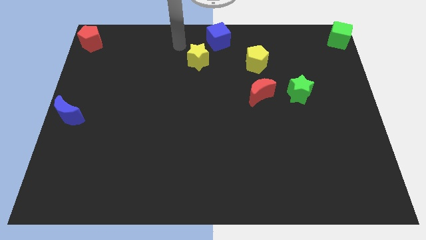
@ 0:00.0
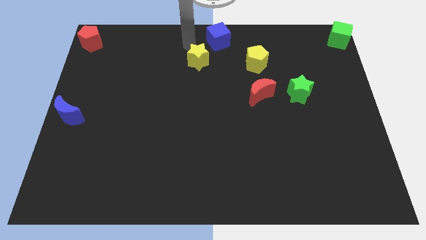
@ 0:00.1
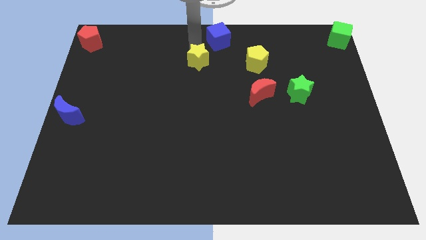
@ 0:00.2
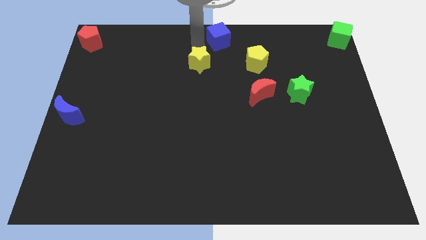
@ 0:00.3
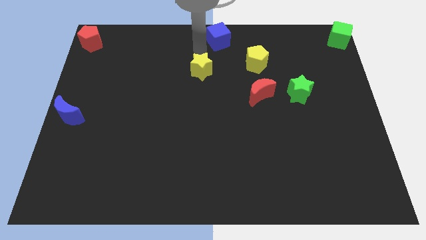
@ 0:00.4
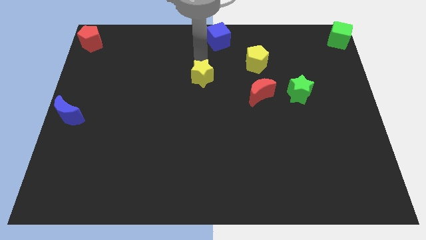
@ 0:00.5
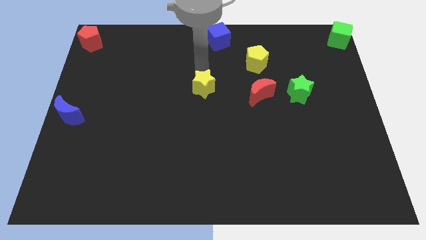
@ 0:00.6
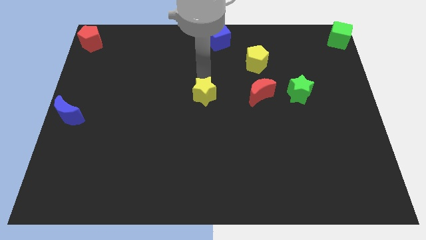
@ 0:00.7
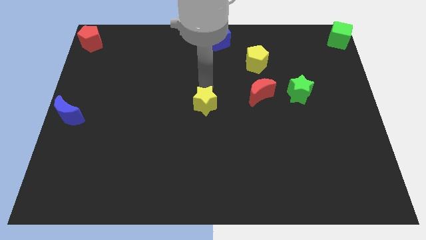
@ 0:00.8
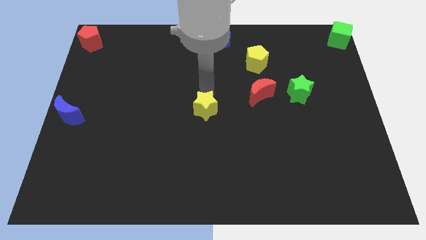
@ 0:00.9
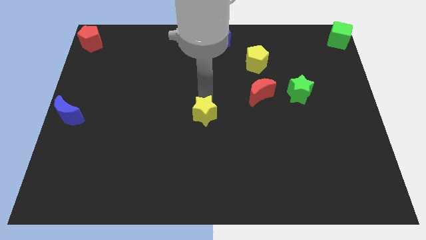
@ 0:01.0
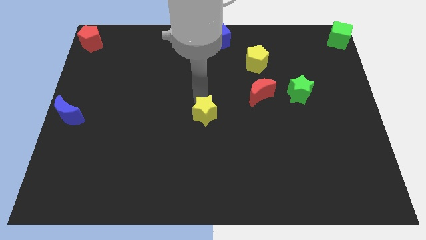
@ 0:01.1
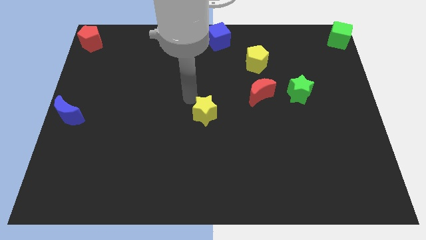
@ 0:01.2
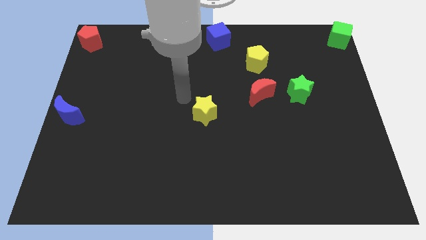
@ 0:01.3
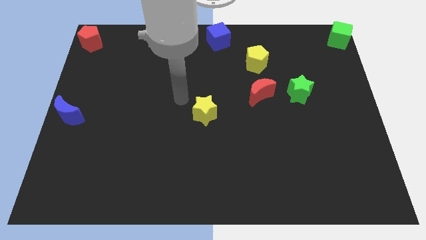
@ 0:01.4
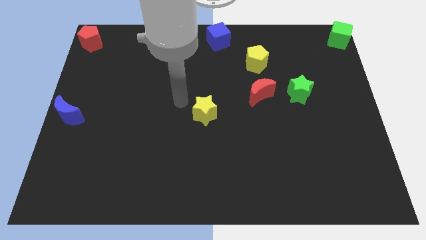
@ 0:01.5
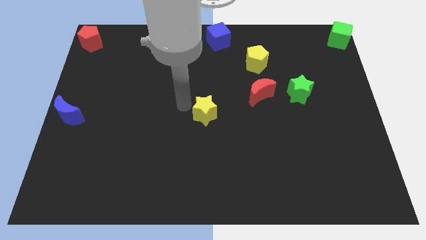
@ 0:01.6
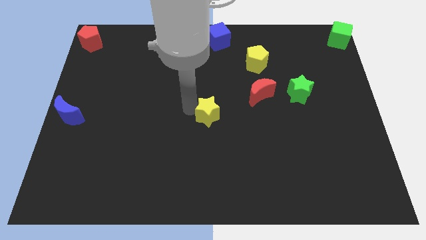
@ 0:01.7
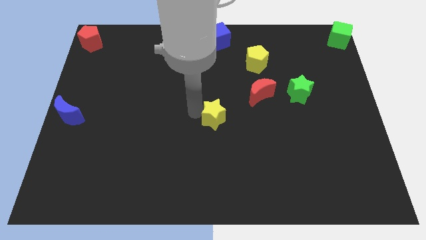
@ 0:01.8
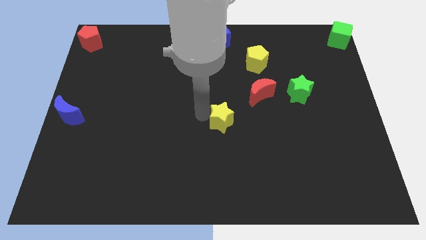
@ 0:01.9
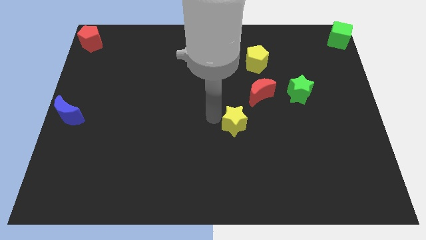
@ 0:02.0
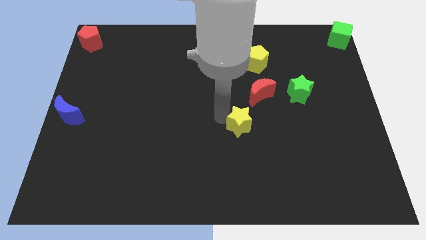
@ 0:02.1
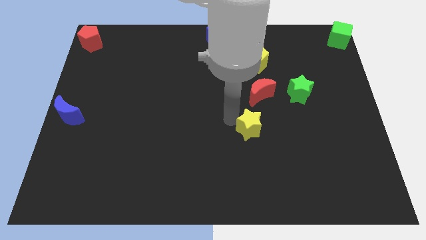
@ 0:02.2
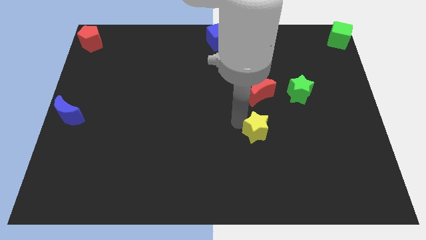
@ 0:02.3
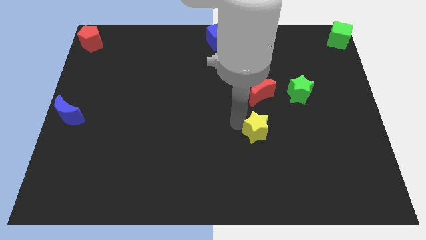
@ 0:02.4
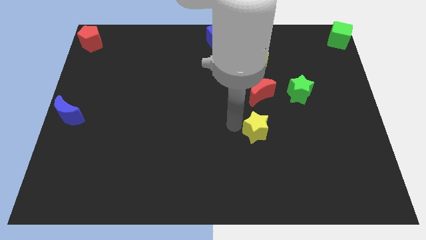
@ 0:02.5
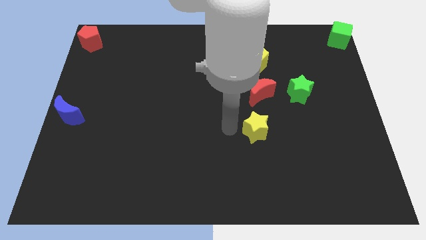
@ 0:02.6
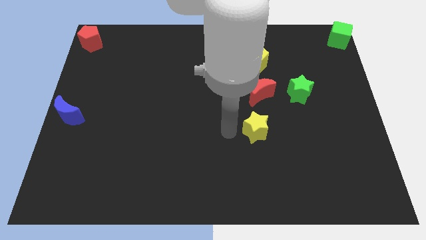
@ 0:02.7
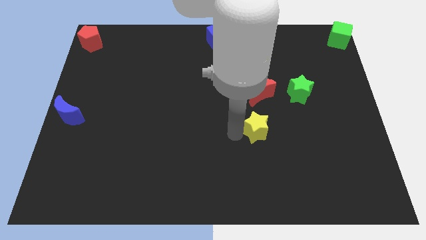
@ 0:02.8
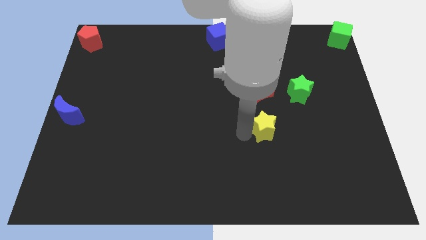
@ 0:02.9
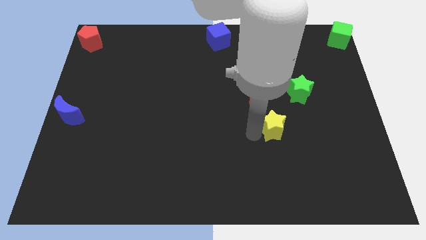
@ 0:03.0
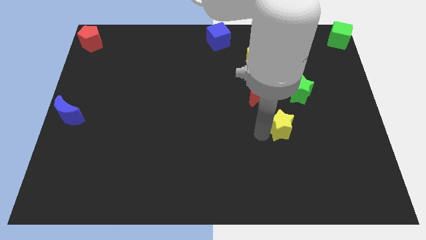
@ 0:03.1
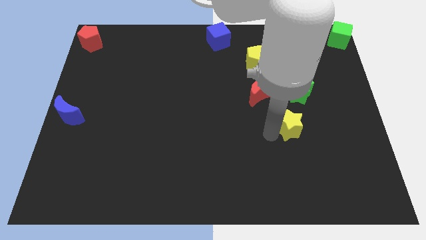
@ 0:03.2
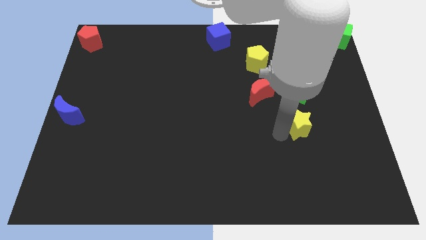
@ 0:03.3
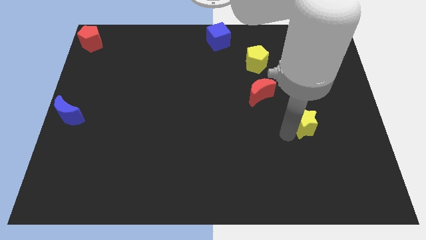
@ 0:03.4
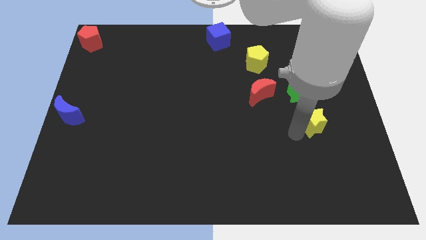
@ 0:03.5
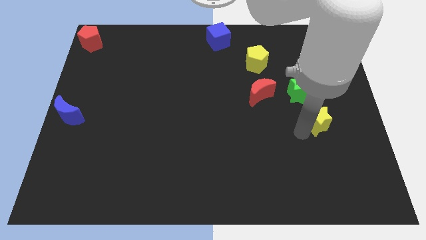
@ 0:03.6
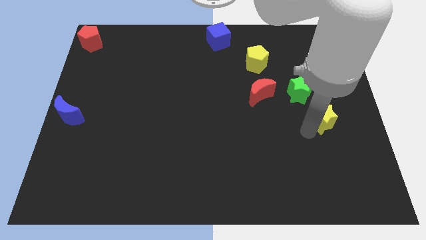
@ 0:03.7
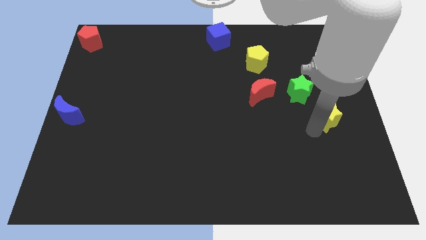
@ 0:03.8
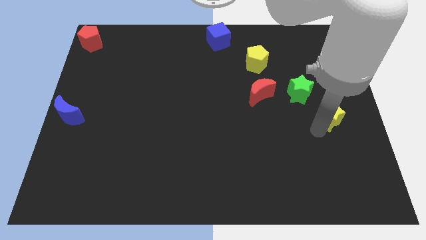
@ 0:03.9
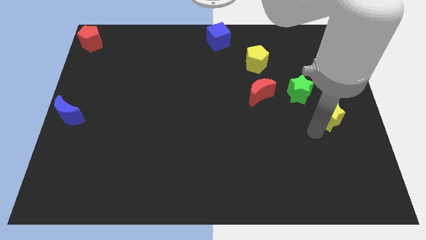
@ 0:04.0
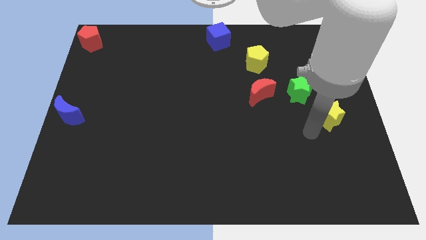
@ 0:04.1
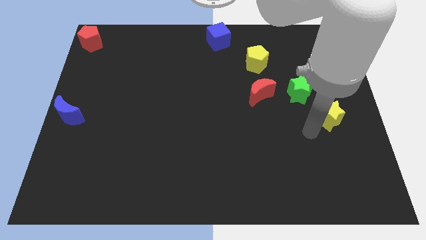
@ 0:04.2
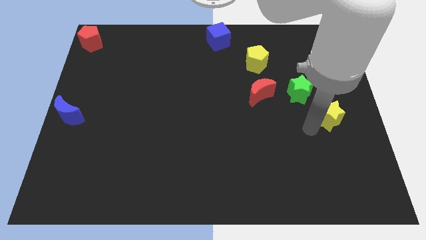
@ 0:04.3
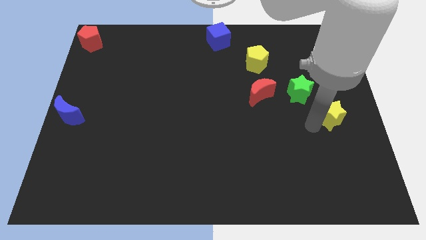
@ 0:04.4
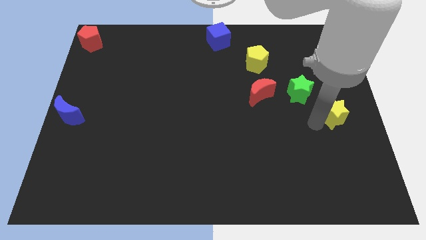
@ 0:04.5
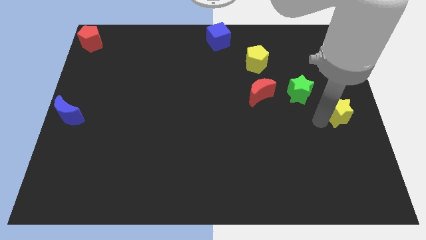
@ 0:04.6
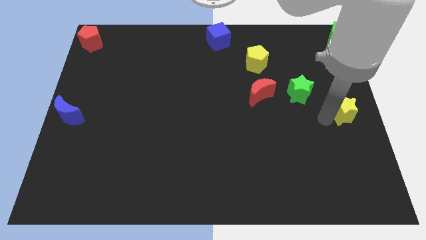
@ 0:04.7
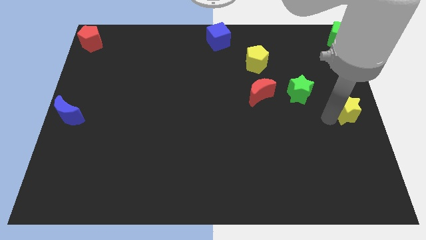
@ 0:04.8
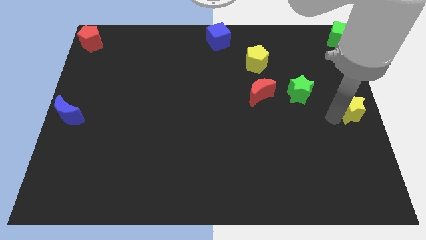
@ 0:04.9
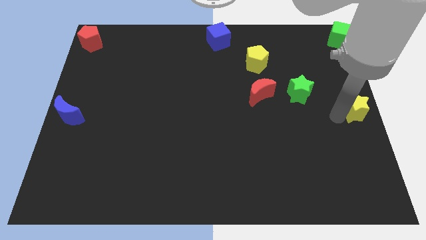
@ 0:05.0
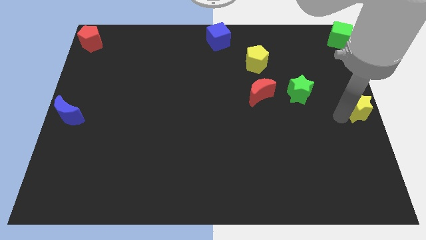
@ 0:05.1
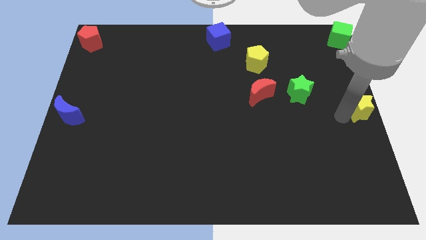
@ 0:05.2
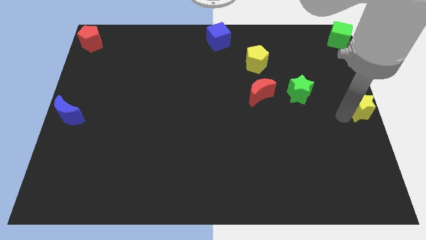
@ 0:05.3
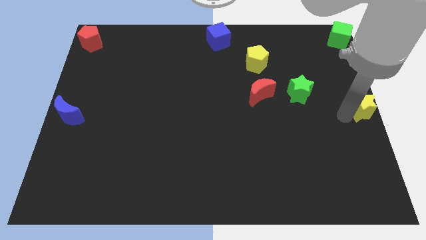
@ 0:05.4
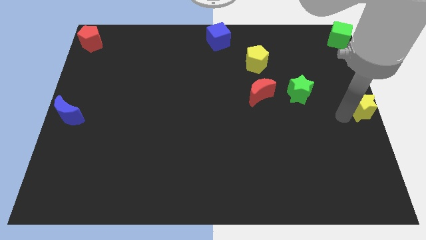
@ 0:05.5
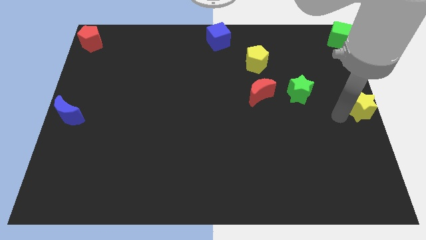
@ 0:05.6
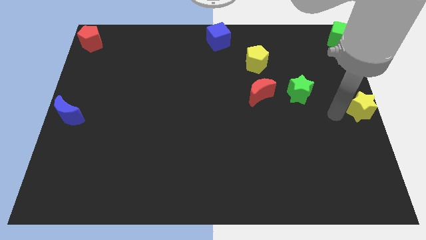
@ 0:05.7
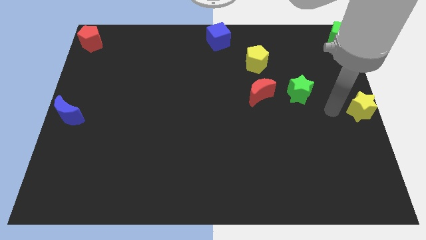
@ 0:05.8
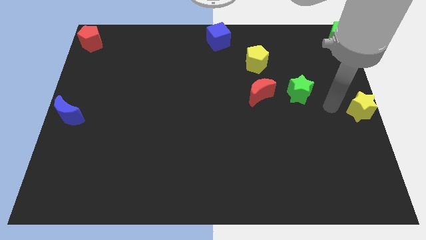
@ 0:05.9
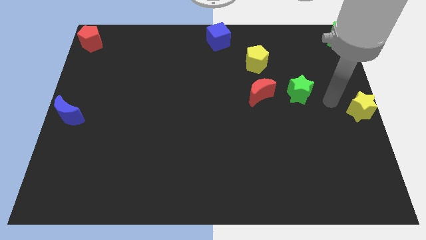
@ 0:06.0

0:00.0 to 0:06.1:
push yellow star to the center right

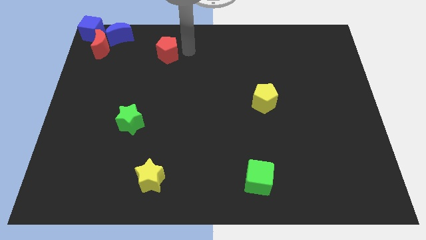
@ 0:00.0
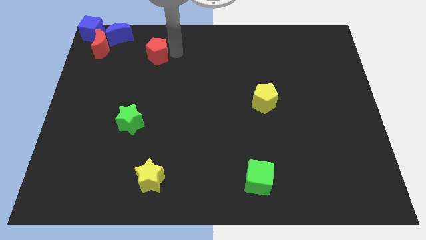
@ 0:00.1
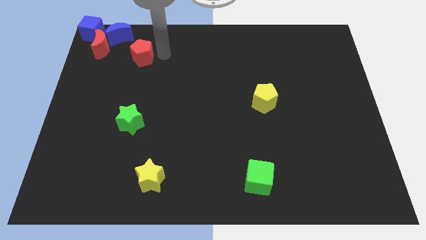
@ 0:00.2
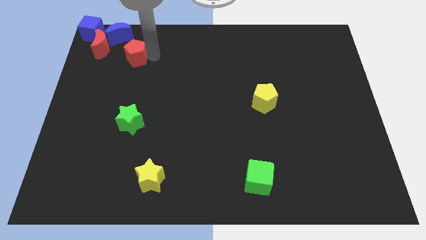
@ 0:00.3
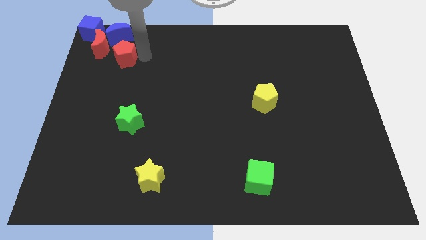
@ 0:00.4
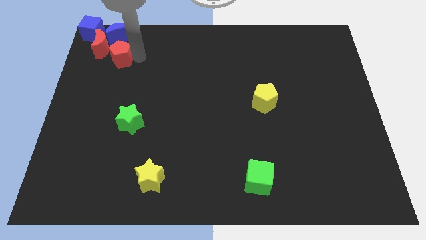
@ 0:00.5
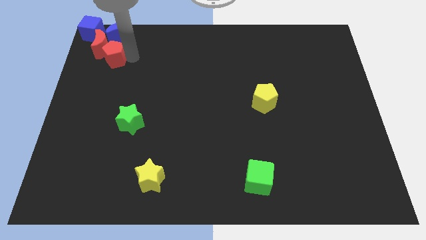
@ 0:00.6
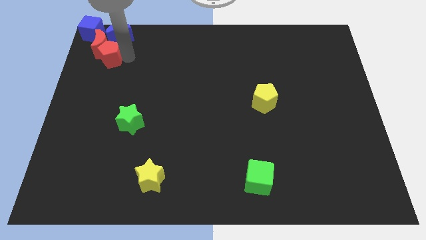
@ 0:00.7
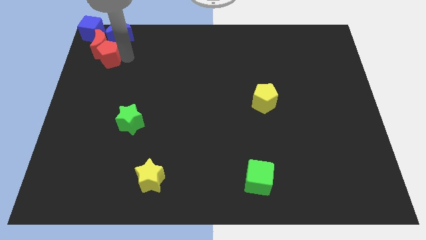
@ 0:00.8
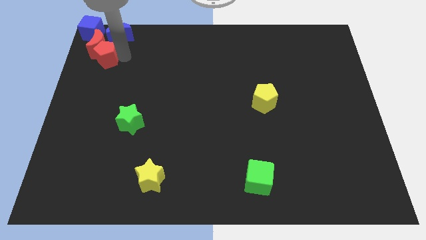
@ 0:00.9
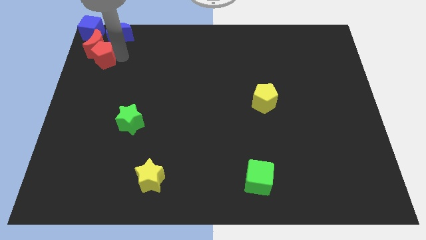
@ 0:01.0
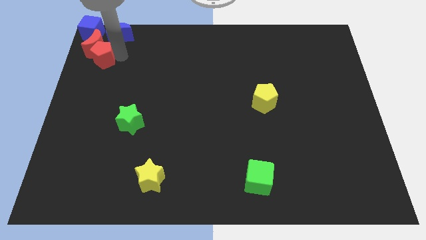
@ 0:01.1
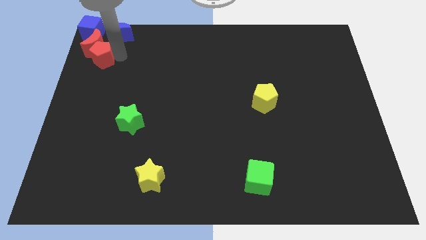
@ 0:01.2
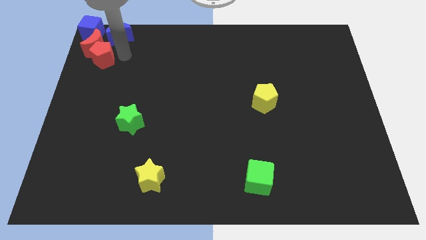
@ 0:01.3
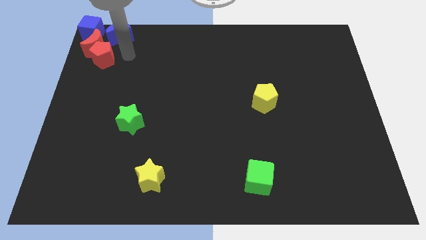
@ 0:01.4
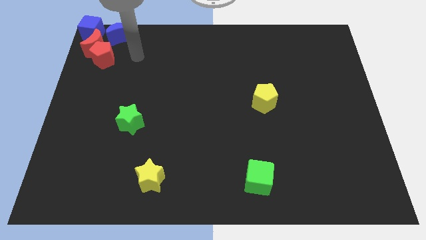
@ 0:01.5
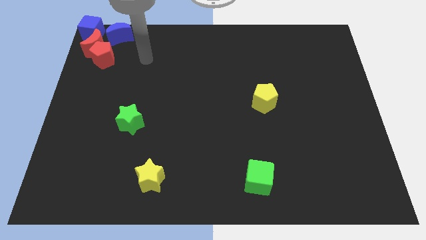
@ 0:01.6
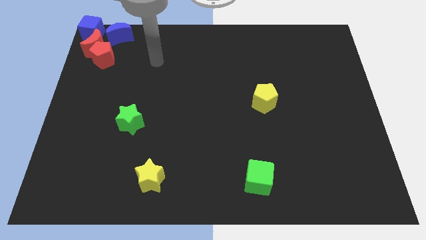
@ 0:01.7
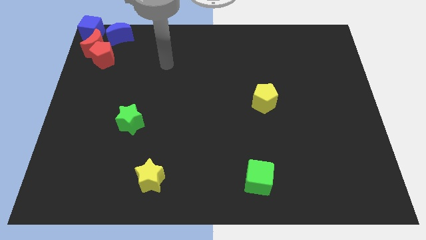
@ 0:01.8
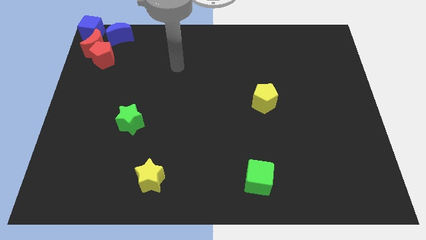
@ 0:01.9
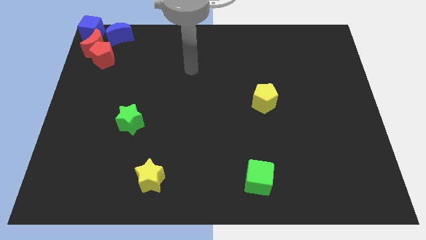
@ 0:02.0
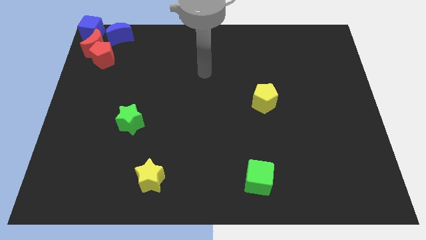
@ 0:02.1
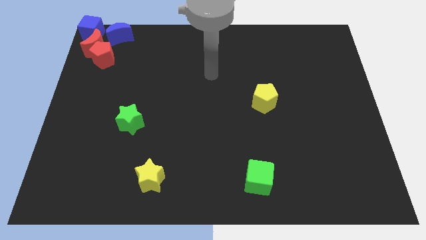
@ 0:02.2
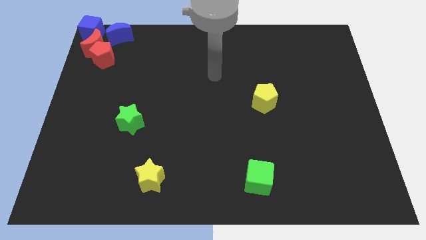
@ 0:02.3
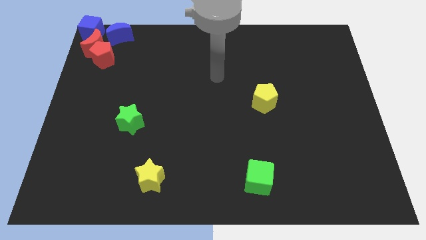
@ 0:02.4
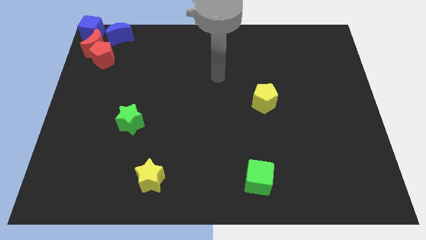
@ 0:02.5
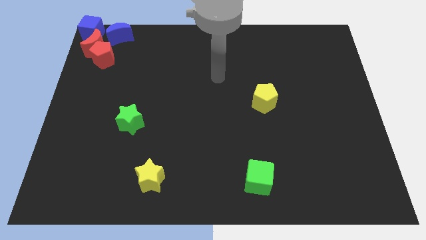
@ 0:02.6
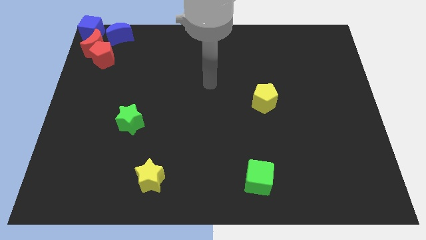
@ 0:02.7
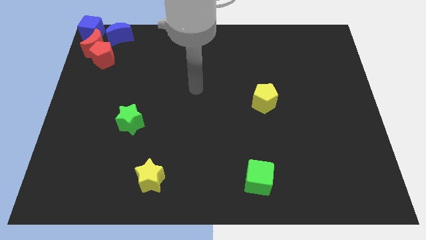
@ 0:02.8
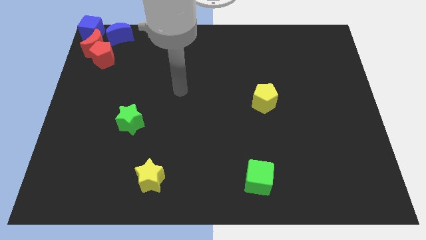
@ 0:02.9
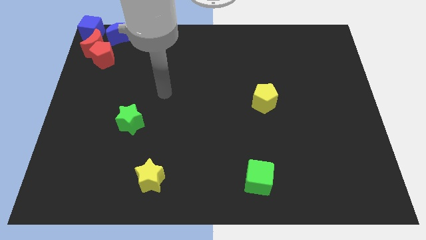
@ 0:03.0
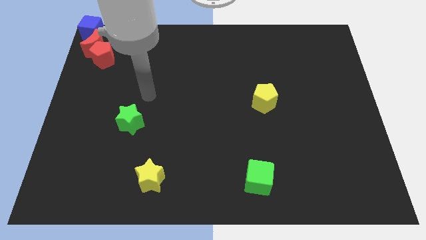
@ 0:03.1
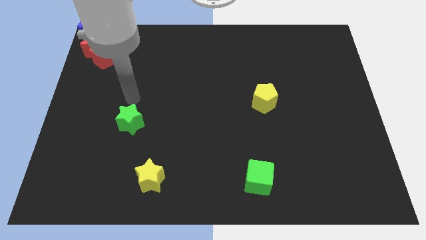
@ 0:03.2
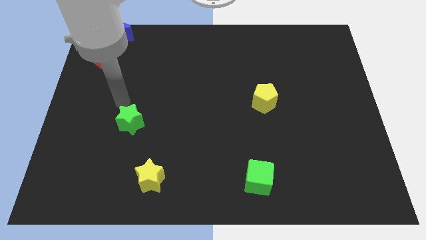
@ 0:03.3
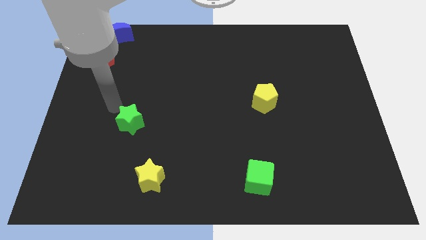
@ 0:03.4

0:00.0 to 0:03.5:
move the red pentagon below the red crescent
